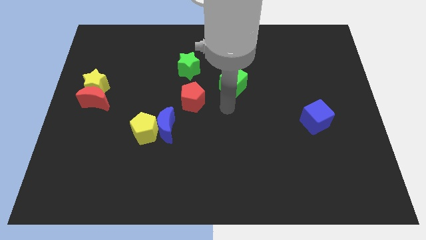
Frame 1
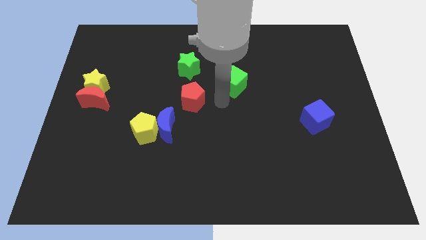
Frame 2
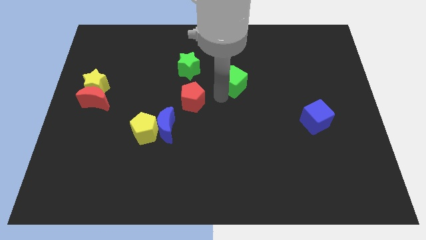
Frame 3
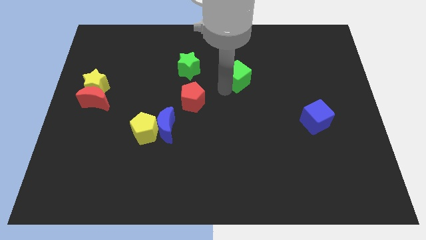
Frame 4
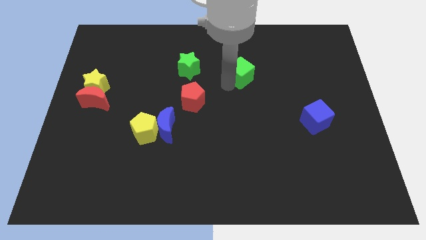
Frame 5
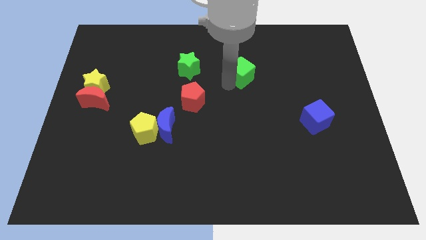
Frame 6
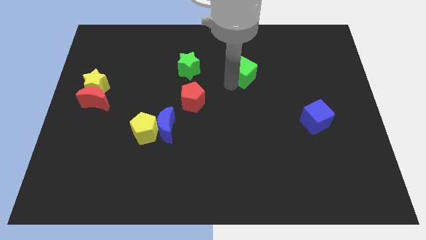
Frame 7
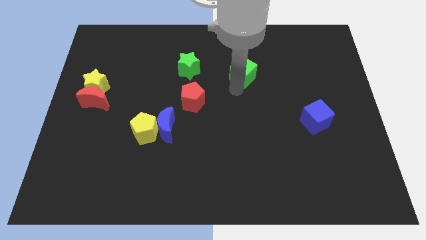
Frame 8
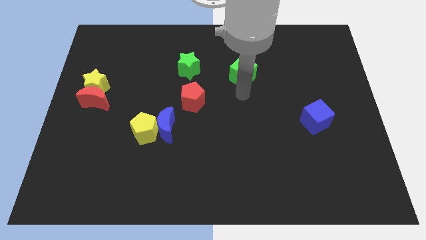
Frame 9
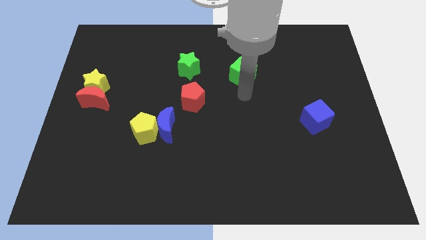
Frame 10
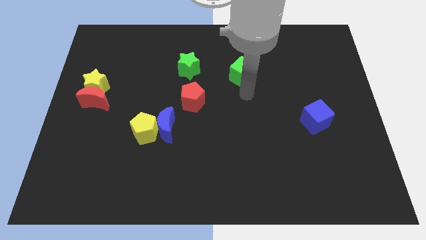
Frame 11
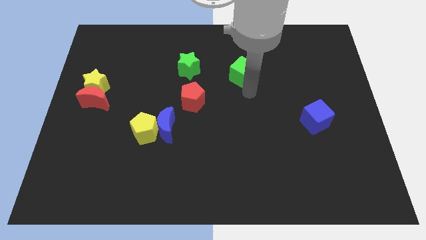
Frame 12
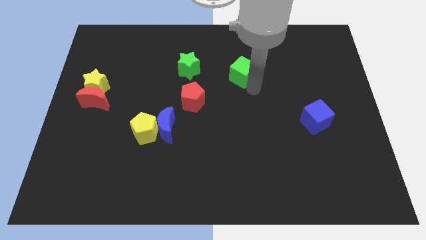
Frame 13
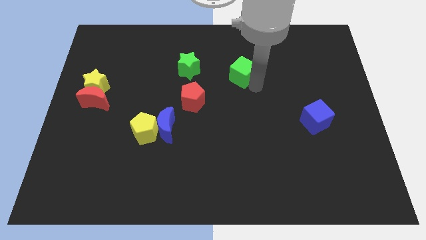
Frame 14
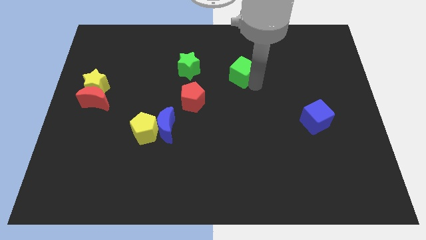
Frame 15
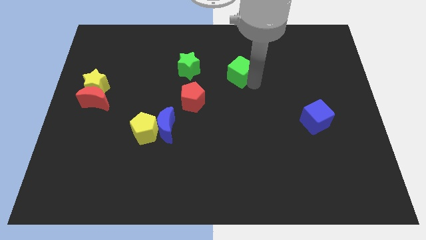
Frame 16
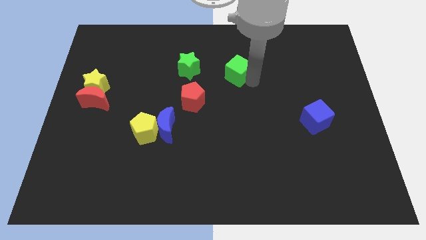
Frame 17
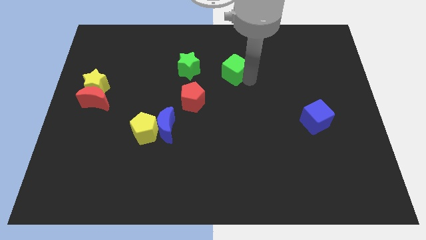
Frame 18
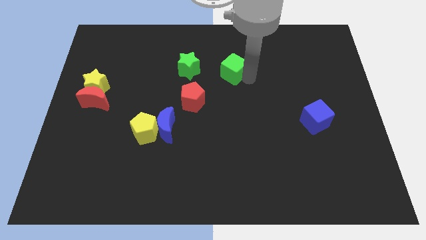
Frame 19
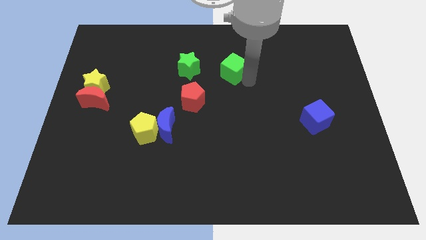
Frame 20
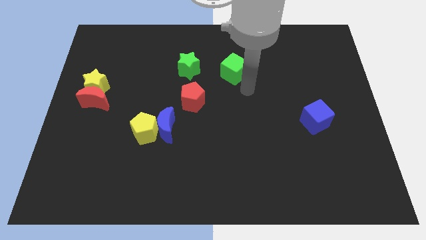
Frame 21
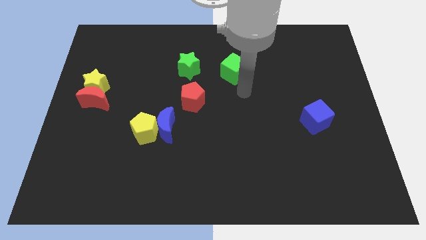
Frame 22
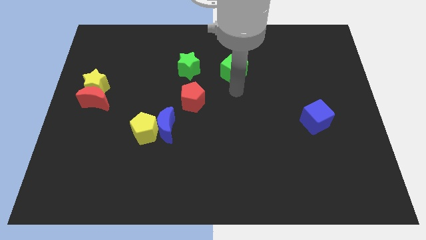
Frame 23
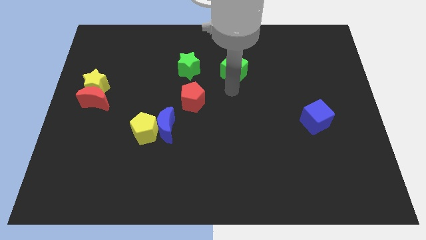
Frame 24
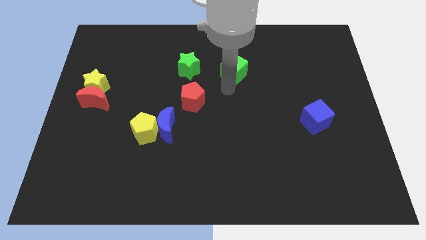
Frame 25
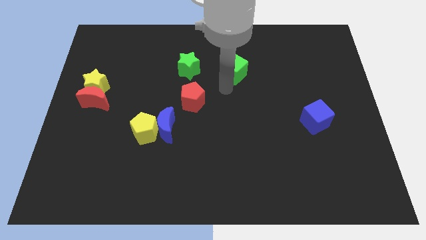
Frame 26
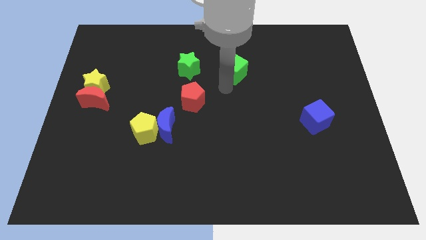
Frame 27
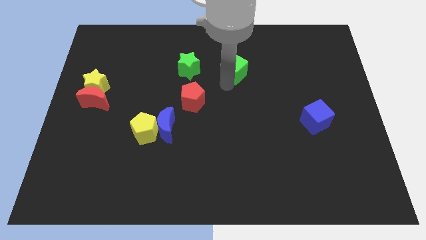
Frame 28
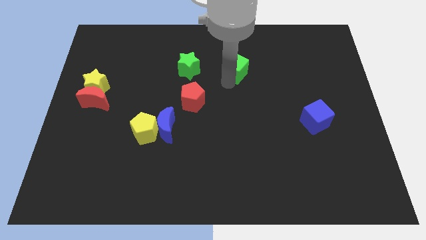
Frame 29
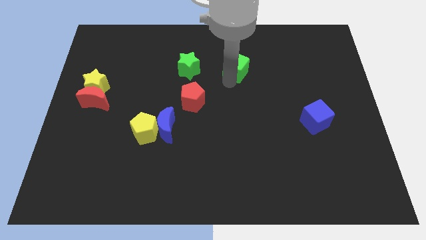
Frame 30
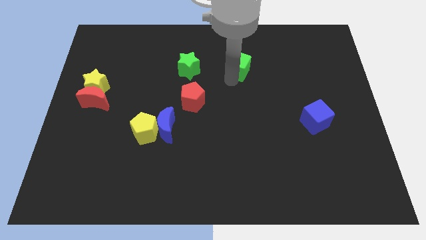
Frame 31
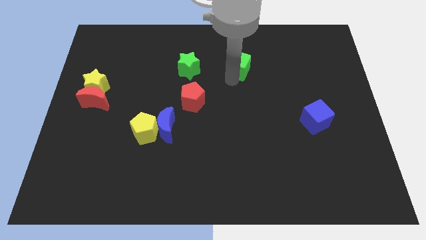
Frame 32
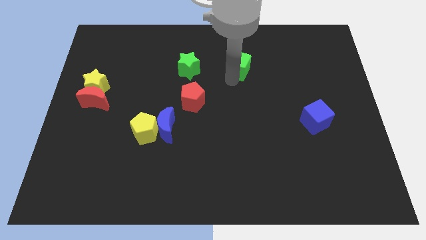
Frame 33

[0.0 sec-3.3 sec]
put the green cube parallel to the green star

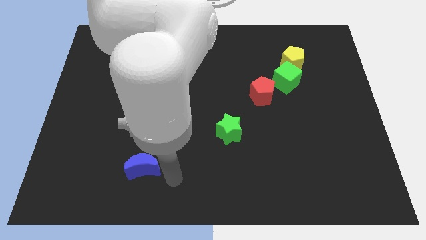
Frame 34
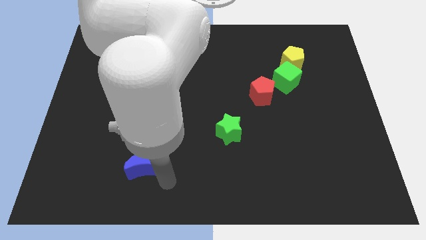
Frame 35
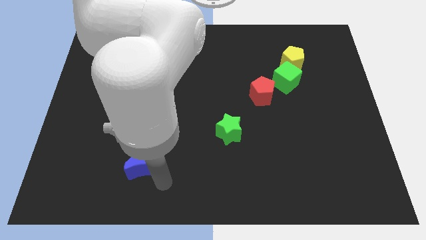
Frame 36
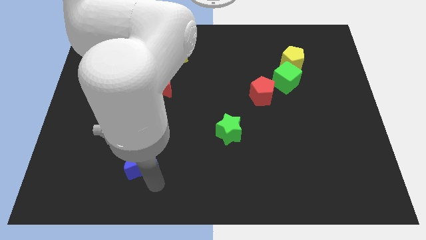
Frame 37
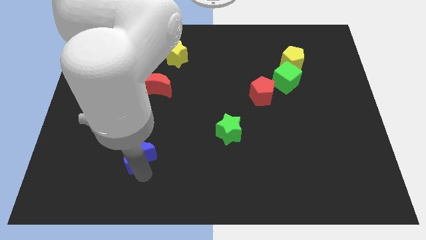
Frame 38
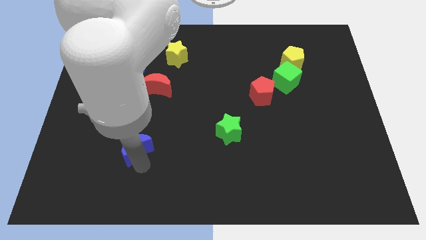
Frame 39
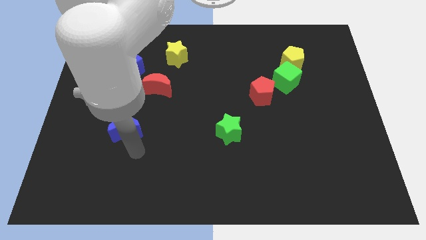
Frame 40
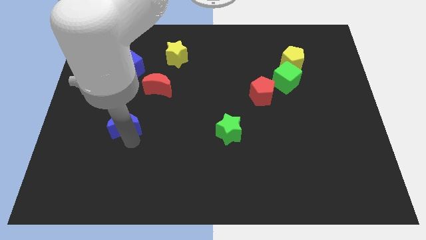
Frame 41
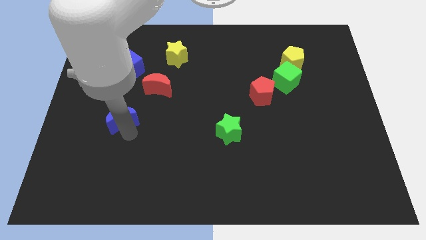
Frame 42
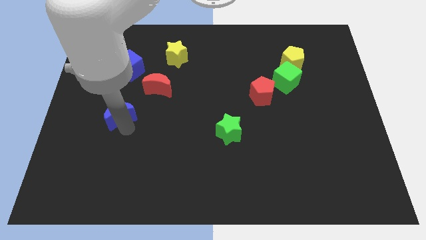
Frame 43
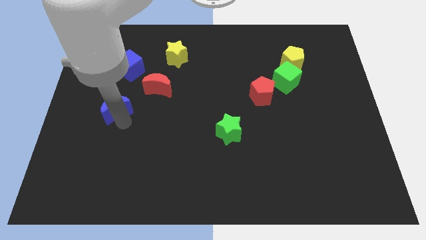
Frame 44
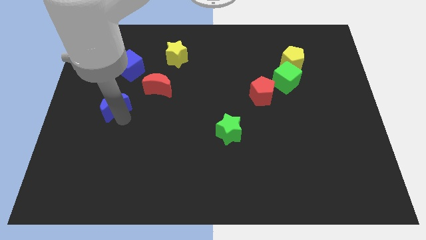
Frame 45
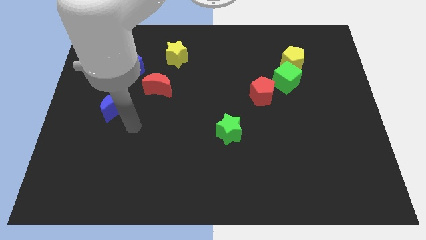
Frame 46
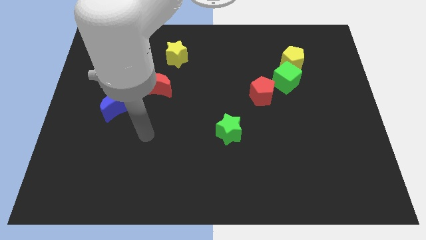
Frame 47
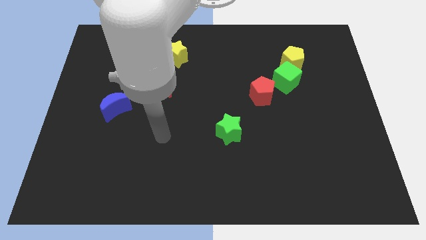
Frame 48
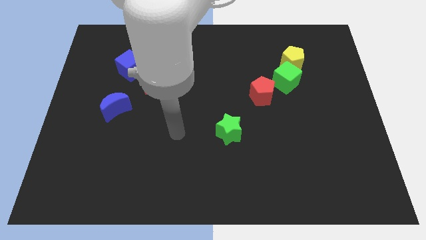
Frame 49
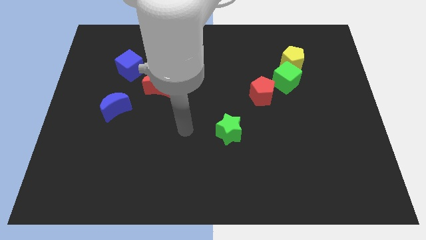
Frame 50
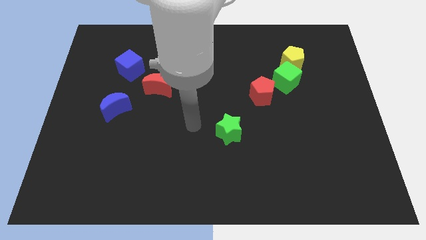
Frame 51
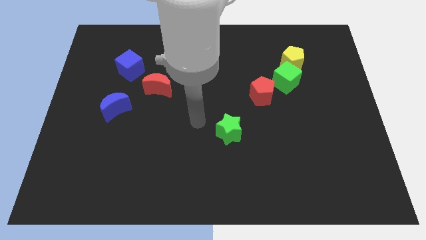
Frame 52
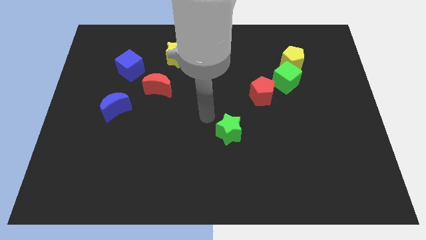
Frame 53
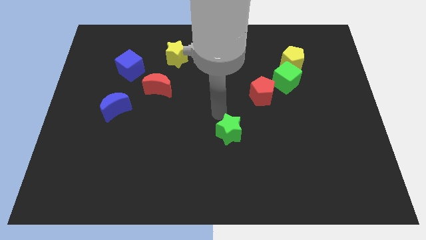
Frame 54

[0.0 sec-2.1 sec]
push blue moon below the blue cube

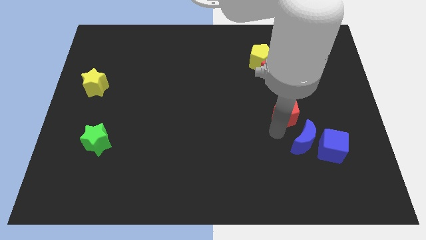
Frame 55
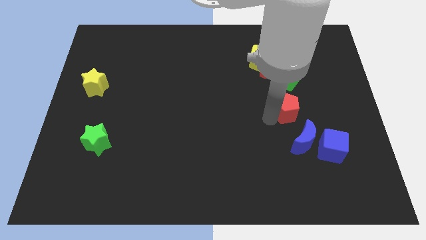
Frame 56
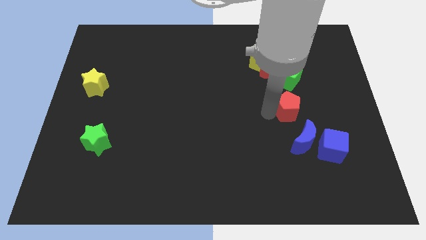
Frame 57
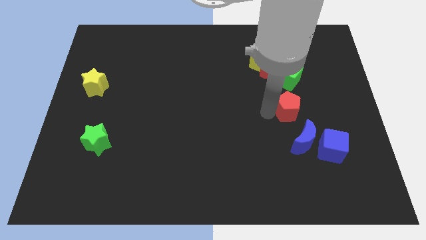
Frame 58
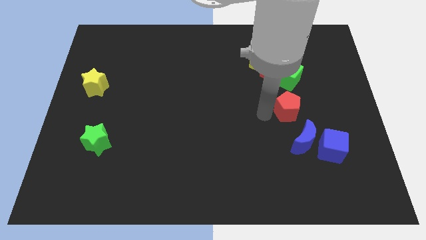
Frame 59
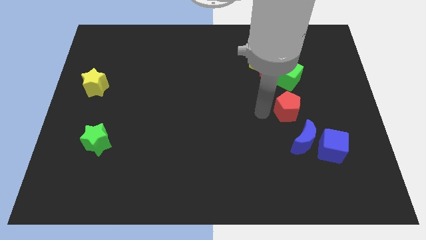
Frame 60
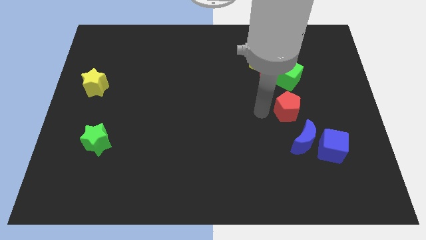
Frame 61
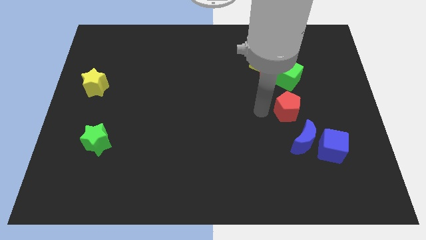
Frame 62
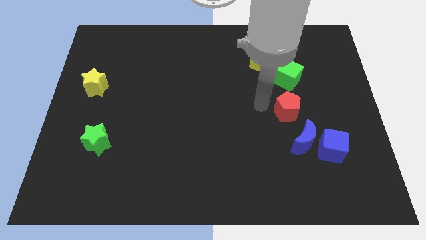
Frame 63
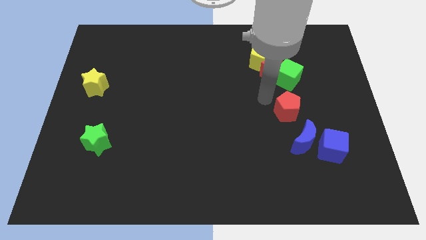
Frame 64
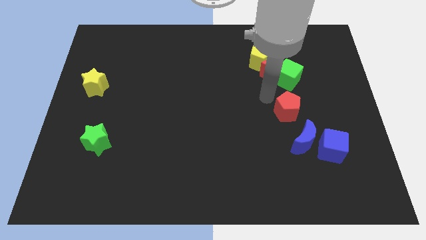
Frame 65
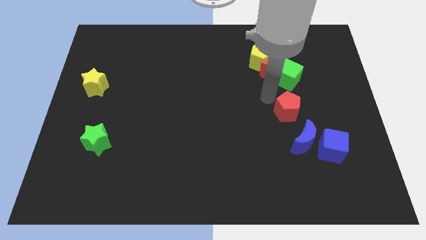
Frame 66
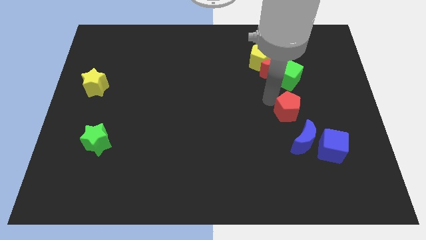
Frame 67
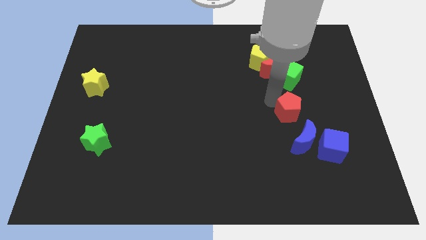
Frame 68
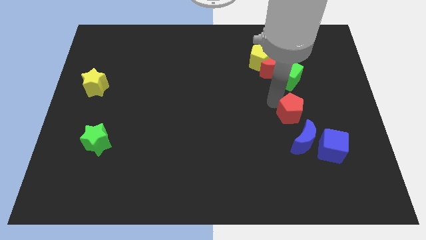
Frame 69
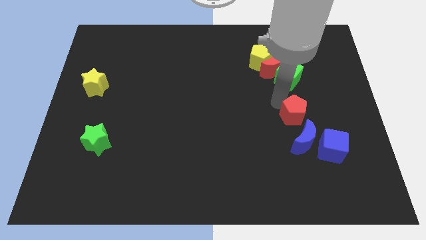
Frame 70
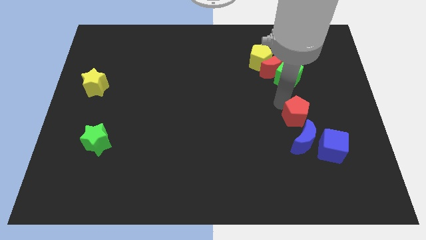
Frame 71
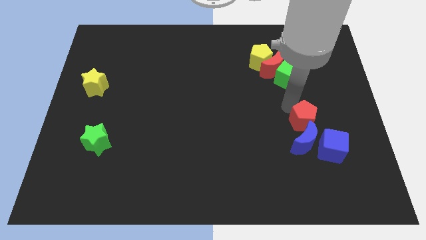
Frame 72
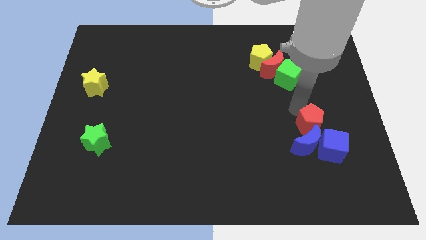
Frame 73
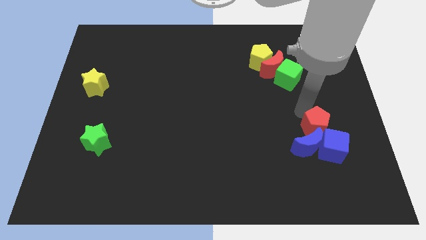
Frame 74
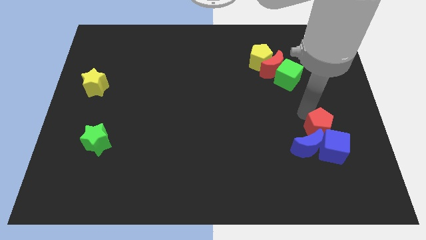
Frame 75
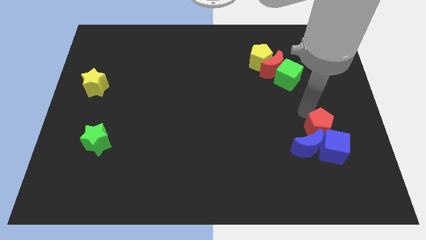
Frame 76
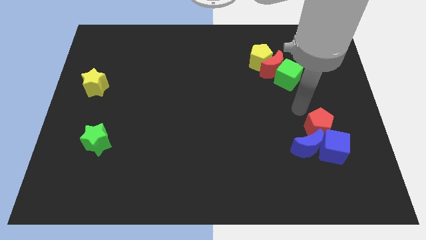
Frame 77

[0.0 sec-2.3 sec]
push the red pentagon into blue blocks on top

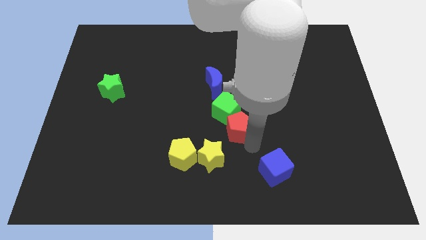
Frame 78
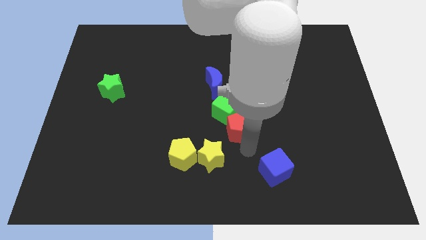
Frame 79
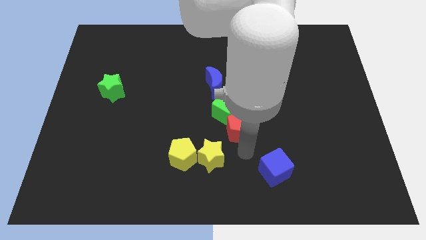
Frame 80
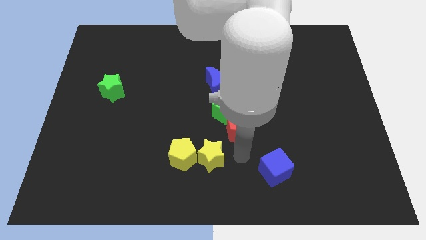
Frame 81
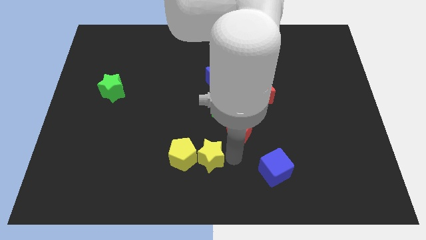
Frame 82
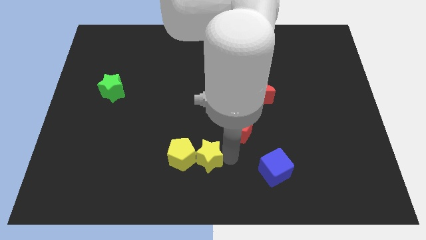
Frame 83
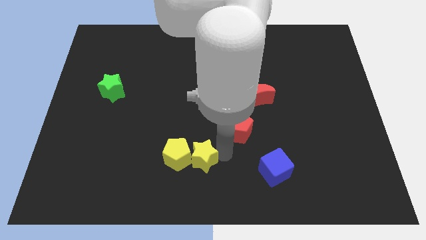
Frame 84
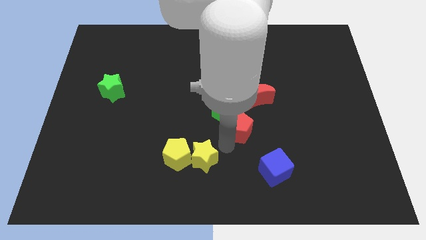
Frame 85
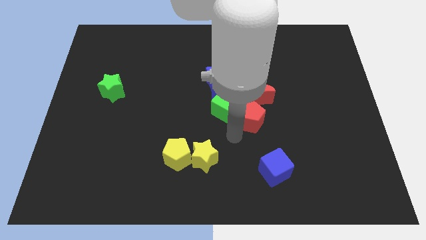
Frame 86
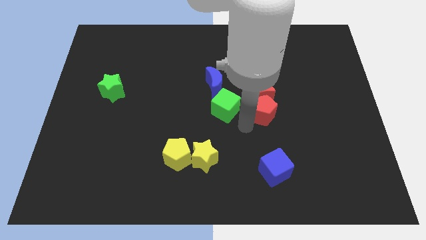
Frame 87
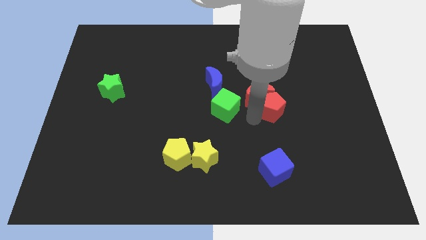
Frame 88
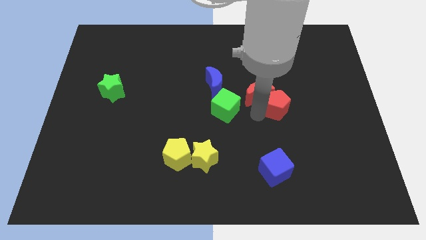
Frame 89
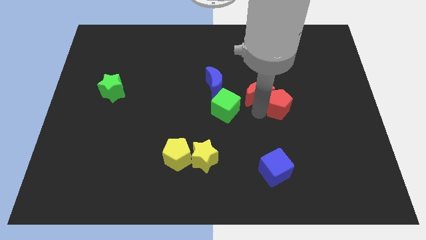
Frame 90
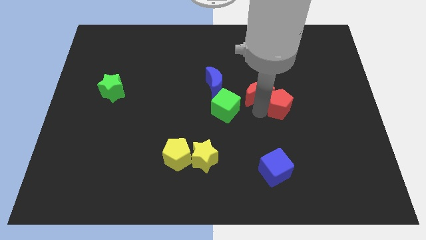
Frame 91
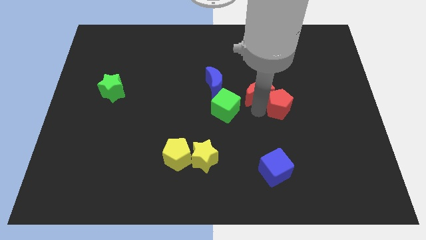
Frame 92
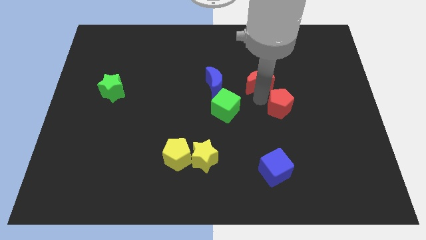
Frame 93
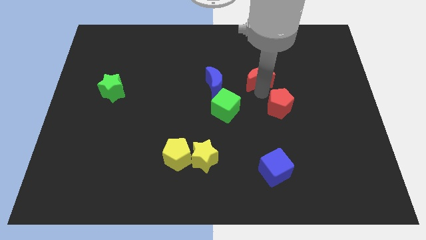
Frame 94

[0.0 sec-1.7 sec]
push the red pentagon to top
